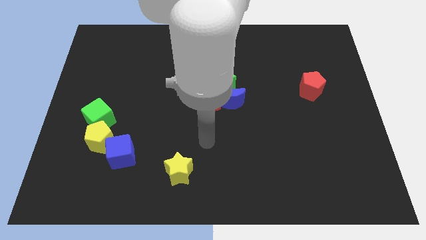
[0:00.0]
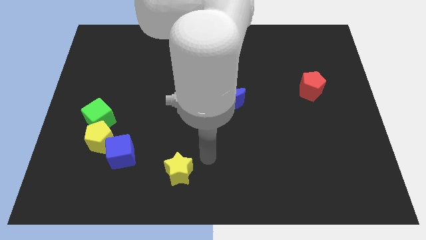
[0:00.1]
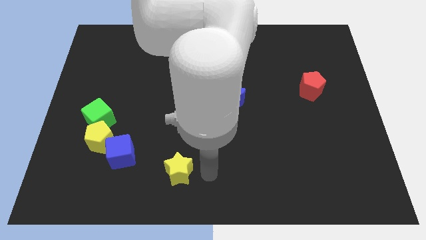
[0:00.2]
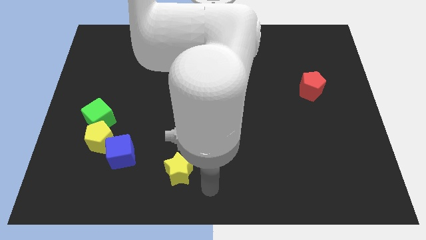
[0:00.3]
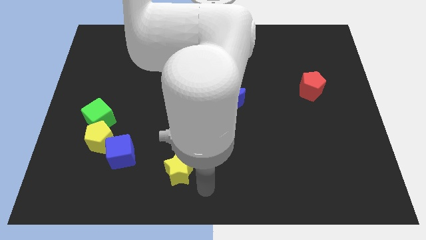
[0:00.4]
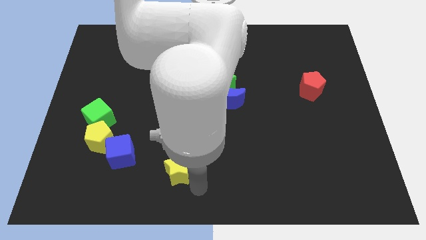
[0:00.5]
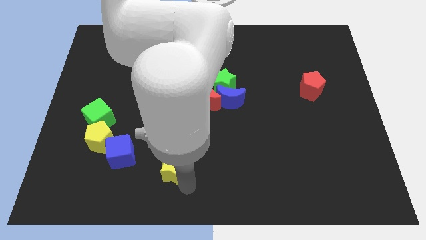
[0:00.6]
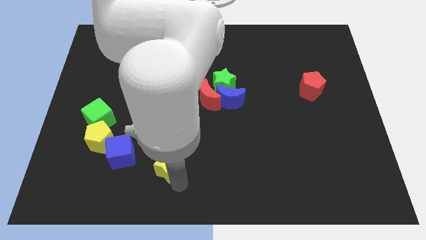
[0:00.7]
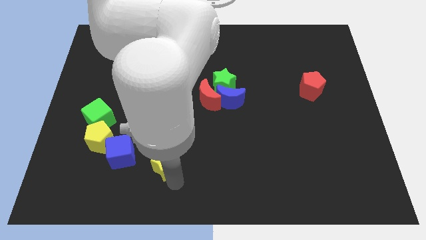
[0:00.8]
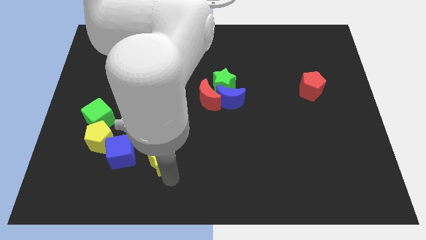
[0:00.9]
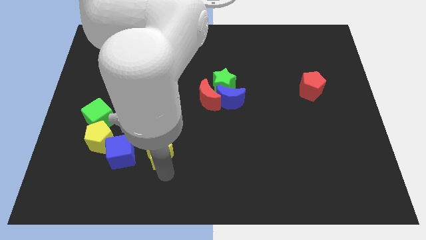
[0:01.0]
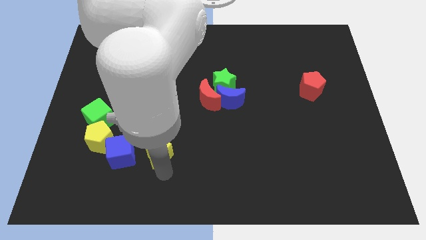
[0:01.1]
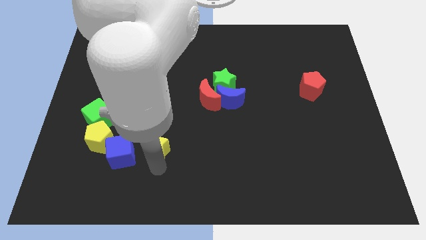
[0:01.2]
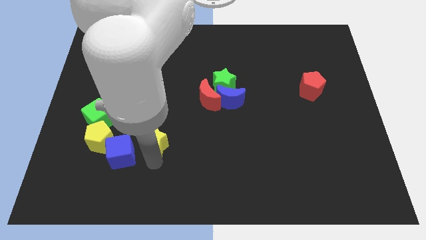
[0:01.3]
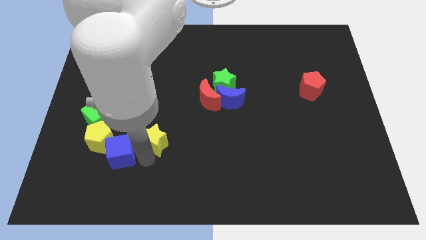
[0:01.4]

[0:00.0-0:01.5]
place the yellow star right to the blue cube

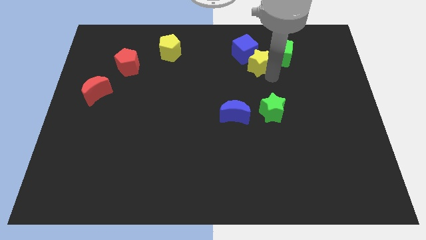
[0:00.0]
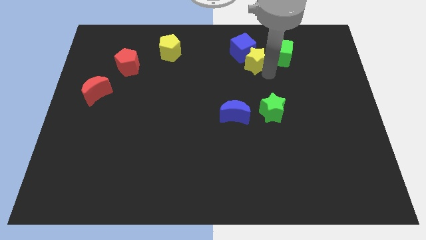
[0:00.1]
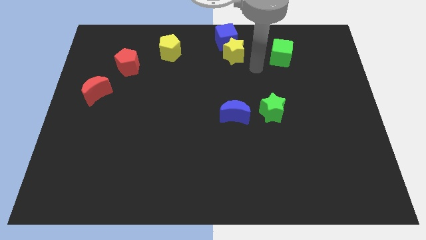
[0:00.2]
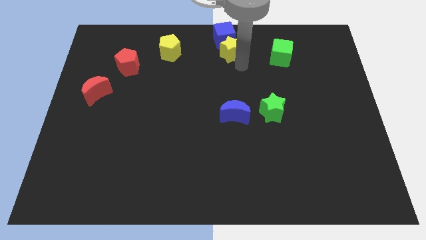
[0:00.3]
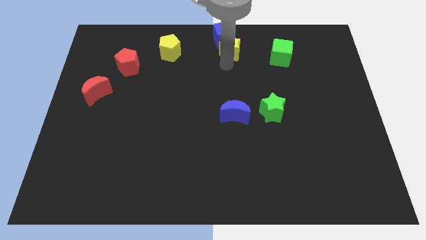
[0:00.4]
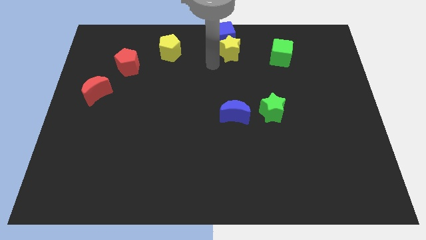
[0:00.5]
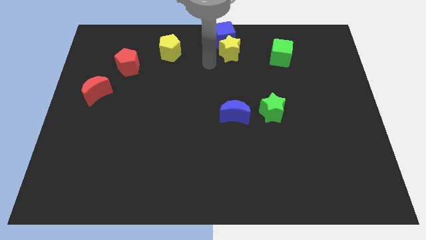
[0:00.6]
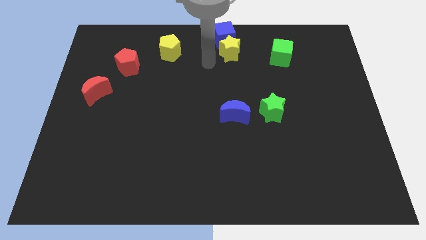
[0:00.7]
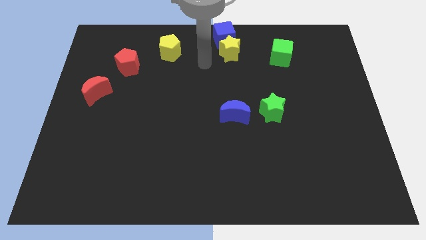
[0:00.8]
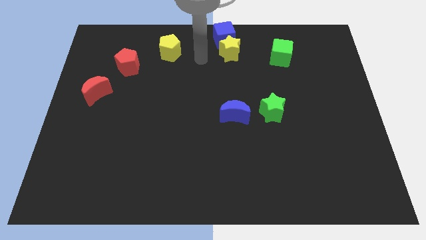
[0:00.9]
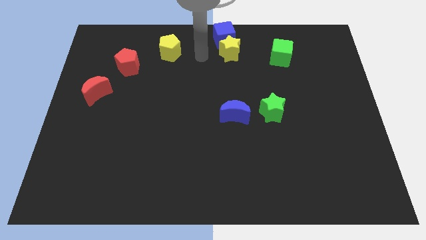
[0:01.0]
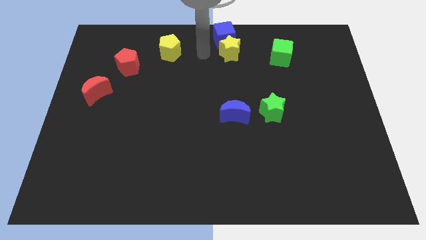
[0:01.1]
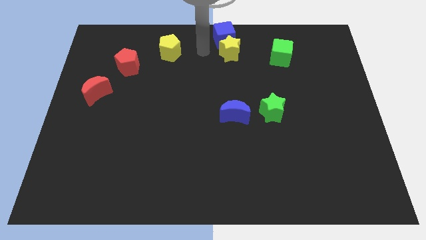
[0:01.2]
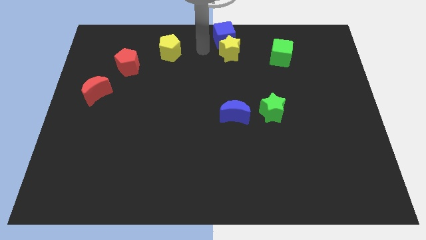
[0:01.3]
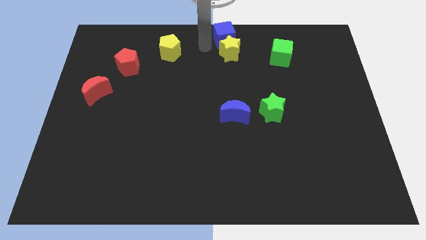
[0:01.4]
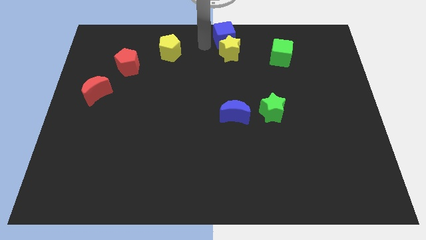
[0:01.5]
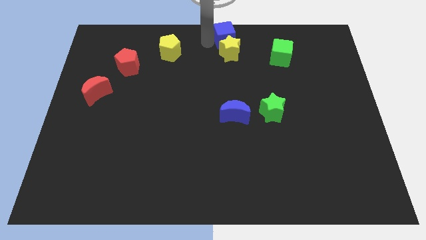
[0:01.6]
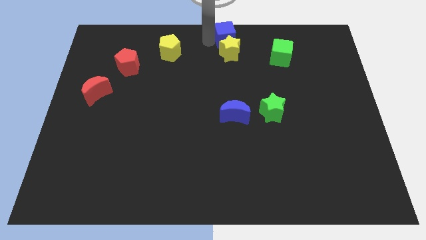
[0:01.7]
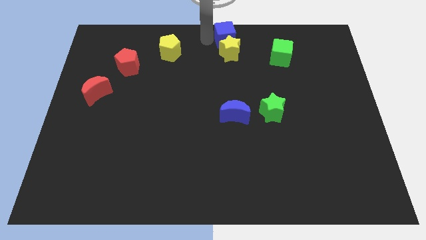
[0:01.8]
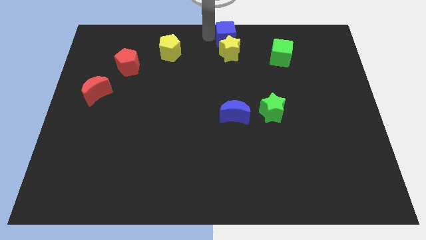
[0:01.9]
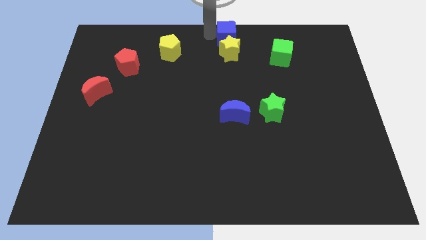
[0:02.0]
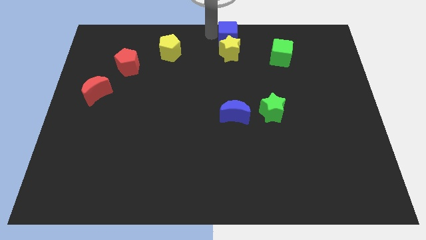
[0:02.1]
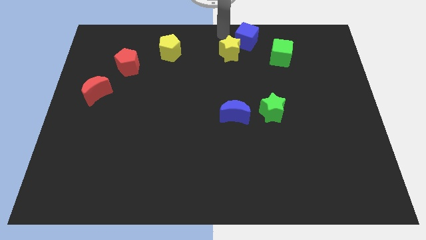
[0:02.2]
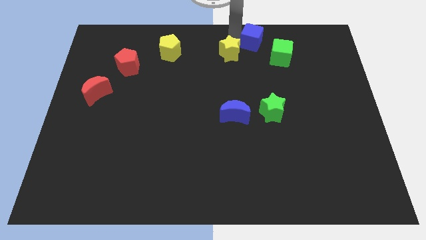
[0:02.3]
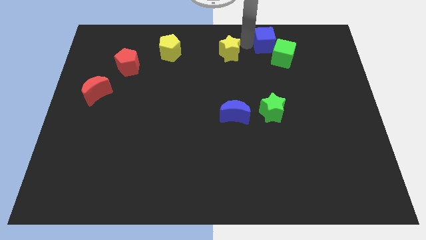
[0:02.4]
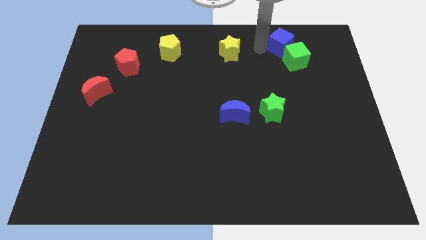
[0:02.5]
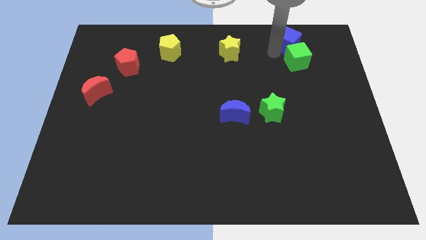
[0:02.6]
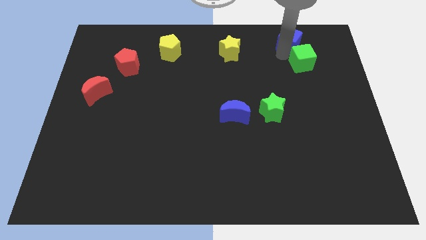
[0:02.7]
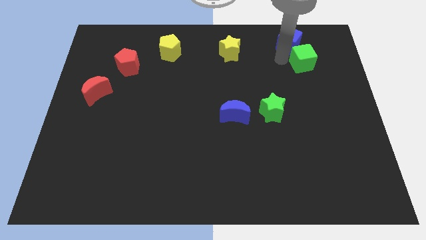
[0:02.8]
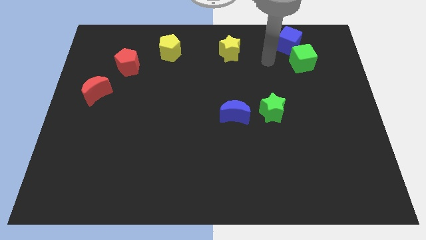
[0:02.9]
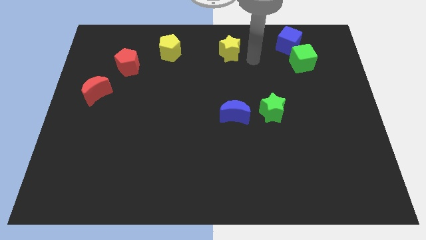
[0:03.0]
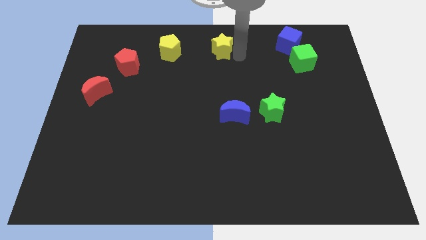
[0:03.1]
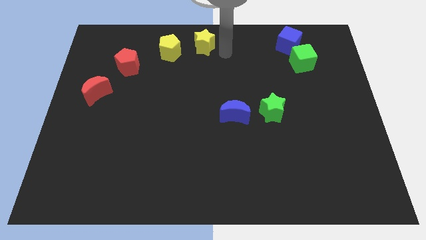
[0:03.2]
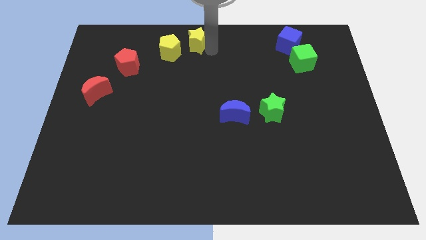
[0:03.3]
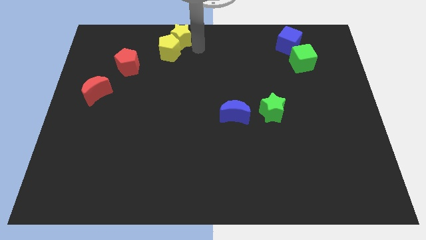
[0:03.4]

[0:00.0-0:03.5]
separate the yellow star and the blue cube

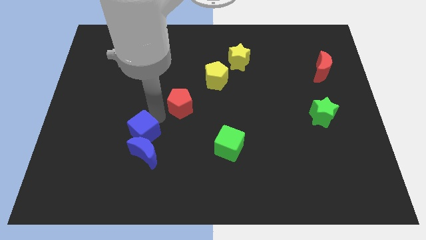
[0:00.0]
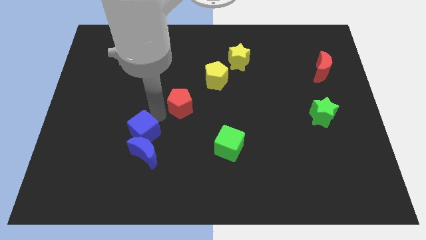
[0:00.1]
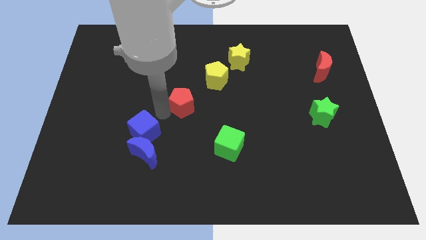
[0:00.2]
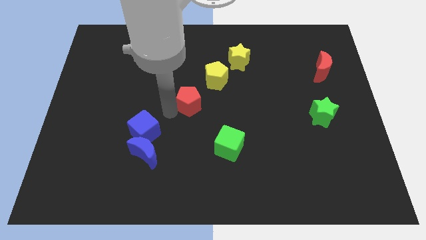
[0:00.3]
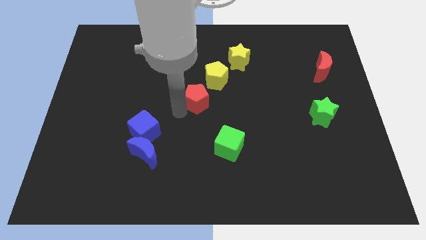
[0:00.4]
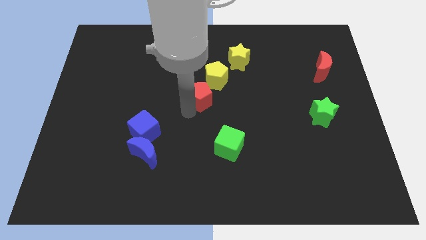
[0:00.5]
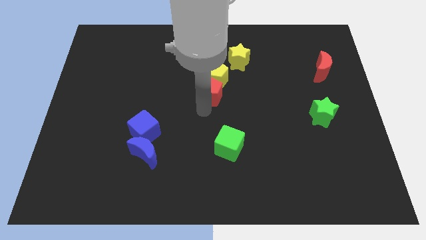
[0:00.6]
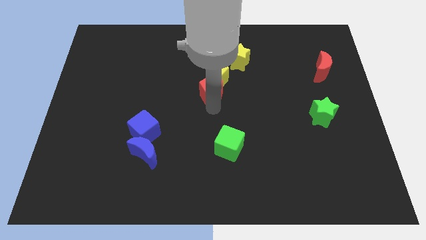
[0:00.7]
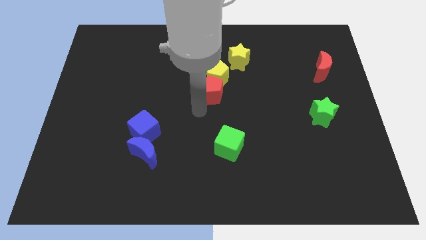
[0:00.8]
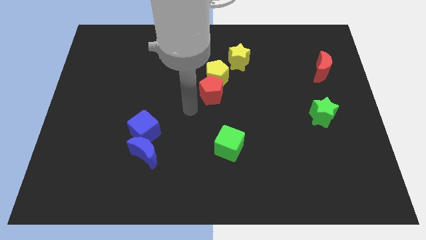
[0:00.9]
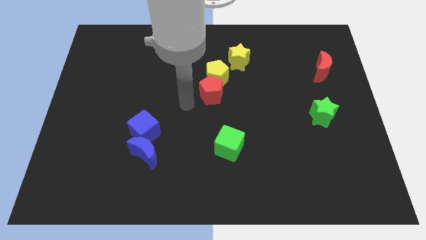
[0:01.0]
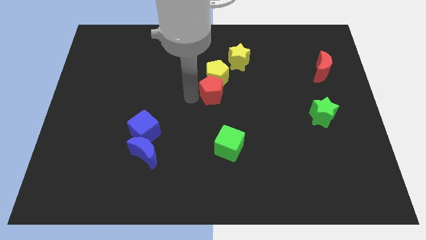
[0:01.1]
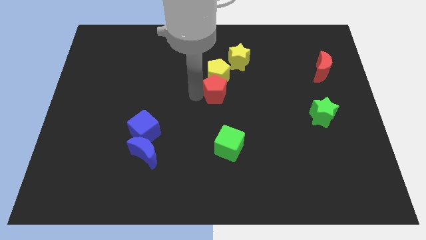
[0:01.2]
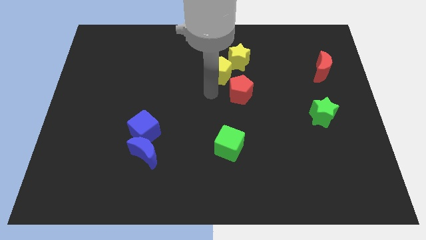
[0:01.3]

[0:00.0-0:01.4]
place red pentagon to the bottom of the yellow pentagon

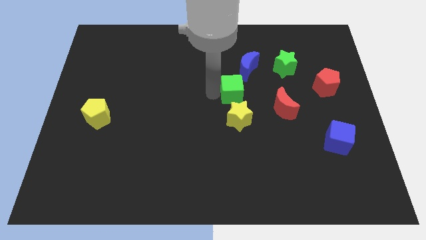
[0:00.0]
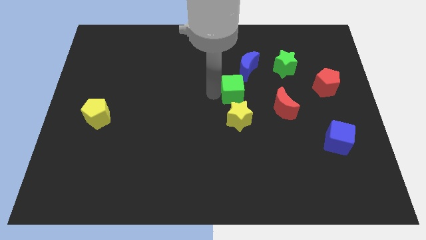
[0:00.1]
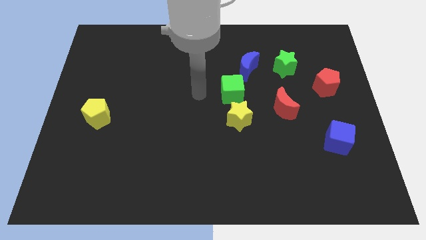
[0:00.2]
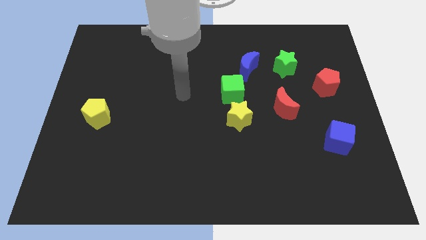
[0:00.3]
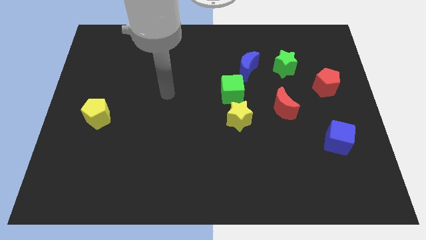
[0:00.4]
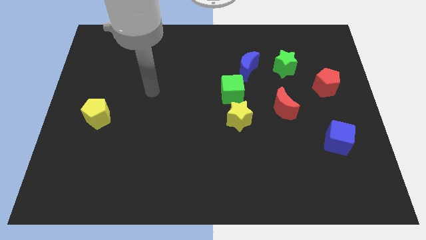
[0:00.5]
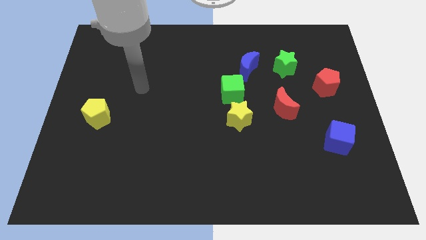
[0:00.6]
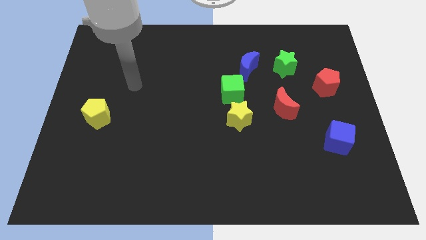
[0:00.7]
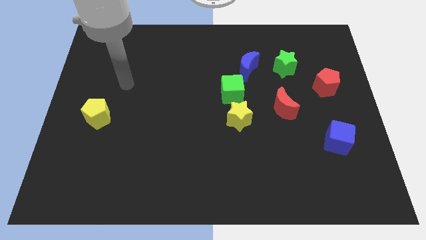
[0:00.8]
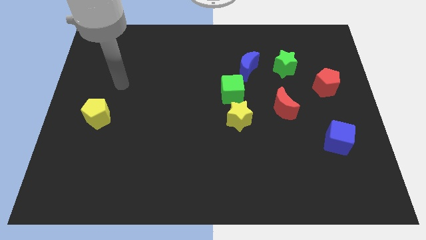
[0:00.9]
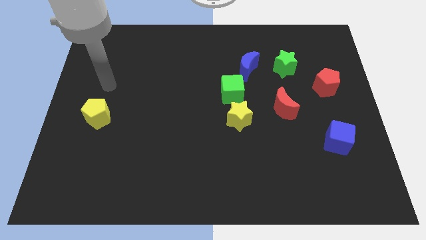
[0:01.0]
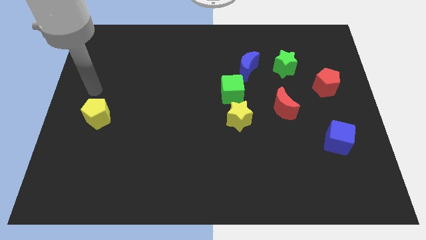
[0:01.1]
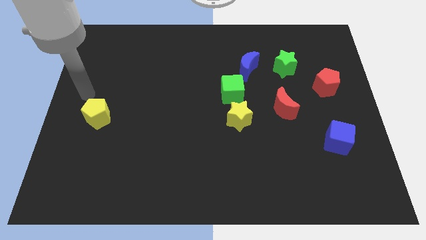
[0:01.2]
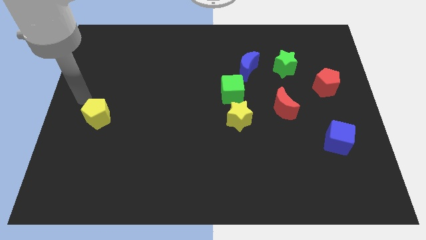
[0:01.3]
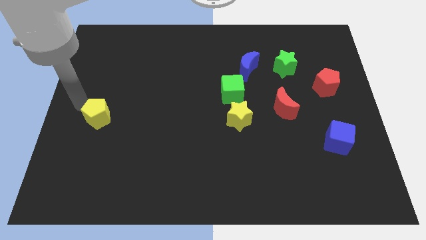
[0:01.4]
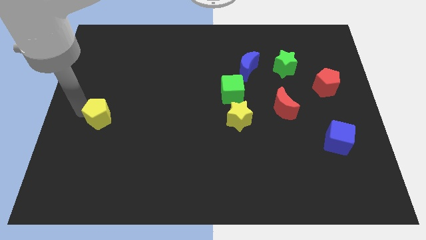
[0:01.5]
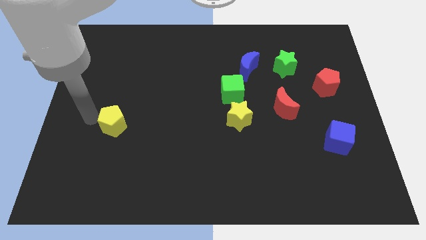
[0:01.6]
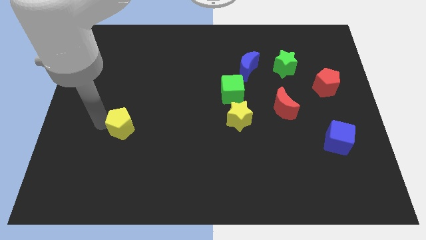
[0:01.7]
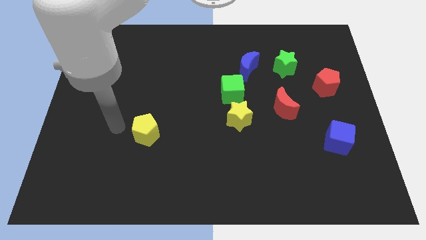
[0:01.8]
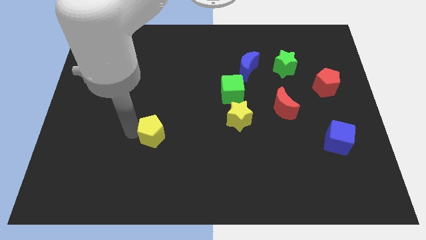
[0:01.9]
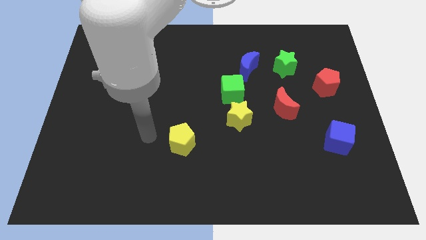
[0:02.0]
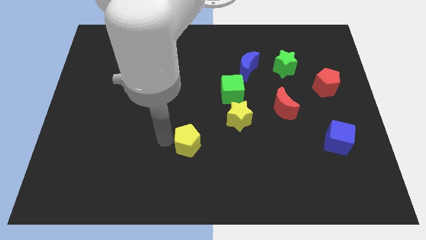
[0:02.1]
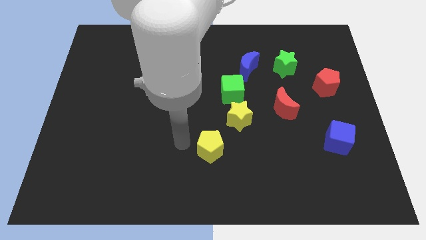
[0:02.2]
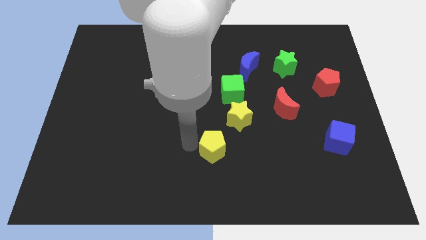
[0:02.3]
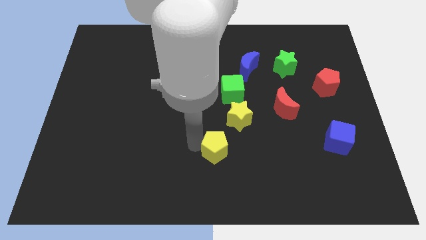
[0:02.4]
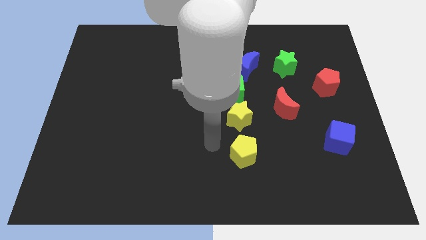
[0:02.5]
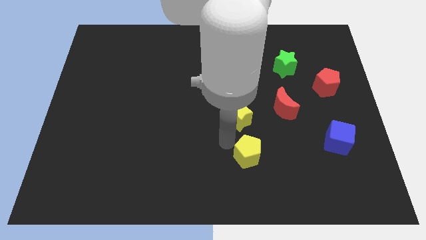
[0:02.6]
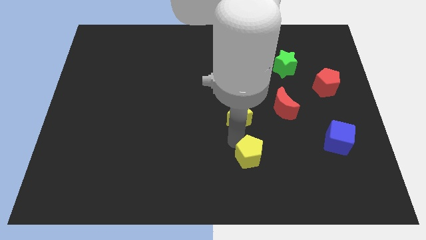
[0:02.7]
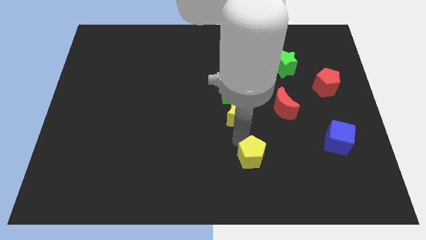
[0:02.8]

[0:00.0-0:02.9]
place yellow pentagon to the bottom of yellow star
